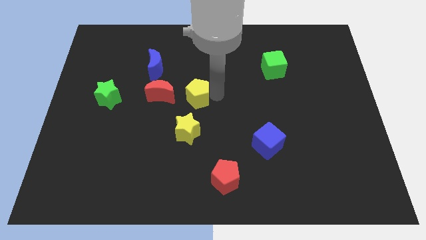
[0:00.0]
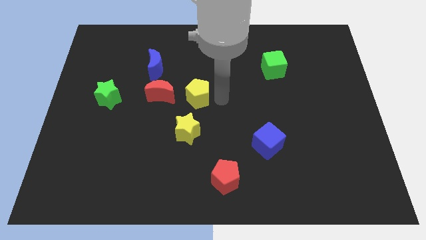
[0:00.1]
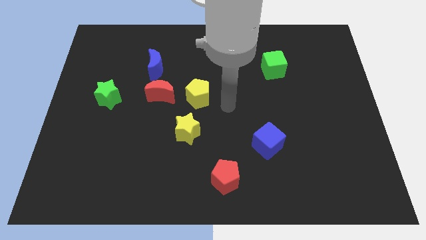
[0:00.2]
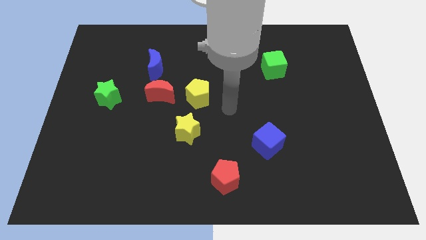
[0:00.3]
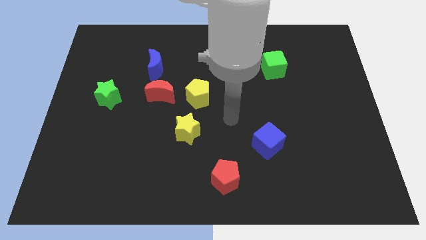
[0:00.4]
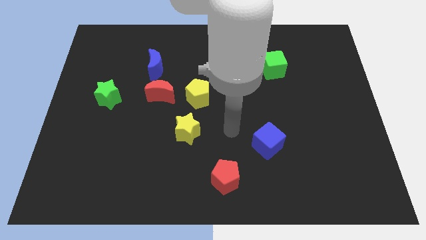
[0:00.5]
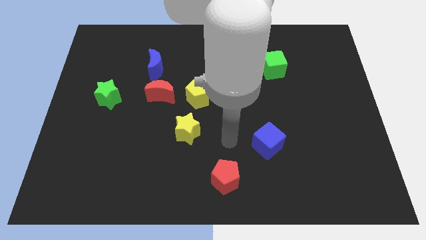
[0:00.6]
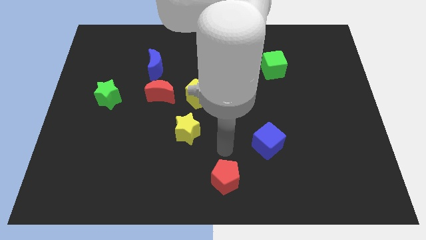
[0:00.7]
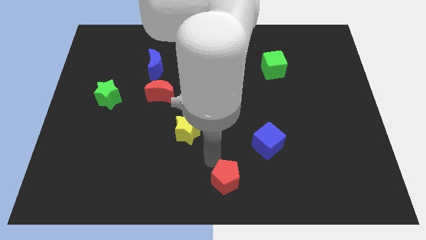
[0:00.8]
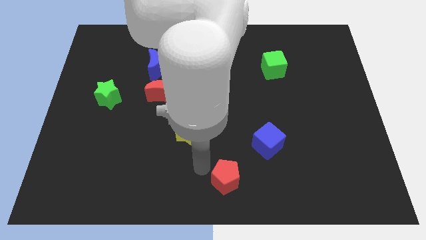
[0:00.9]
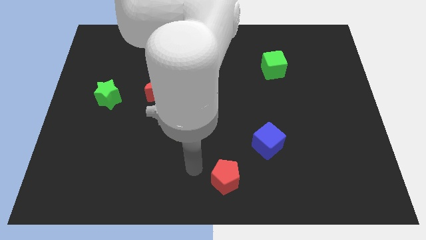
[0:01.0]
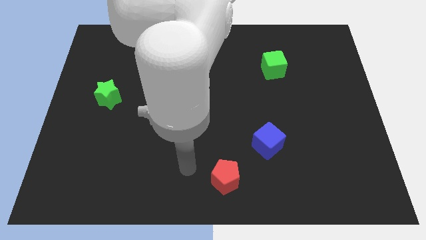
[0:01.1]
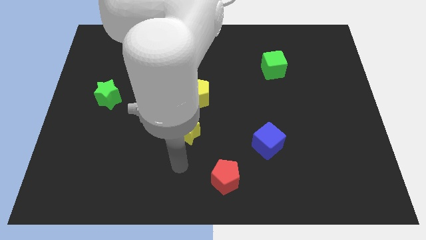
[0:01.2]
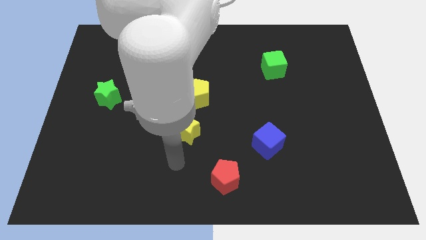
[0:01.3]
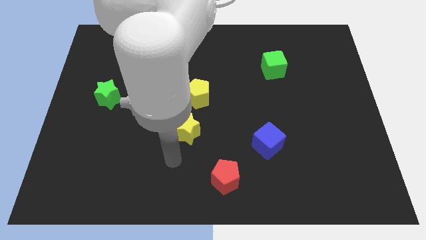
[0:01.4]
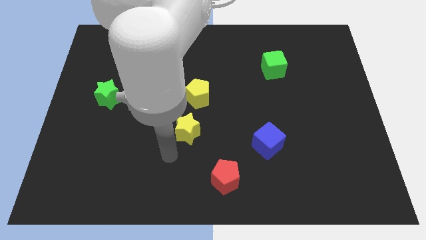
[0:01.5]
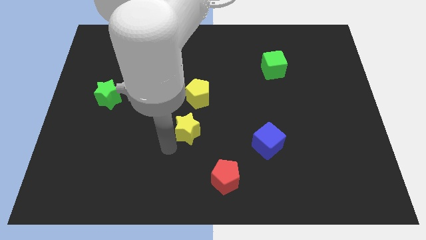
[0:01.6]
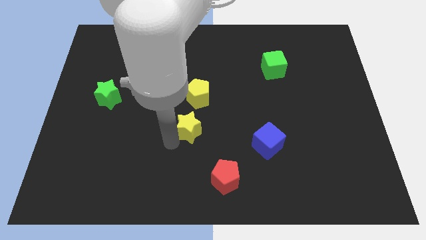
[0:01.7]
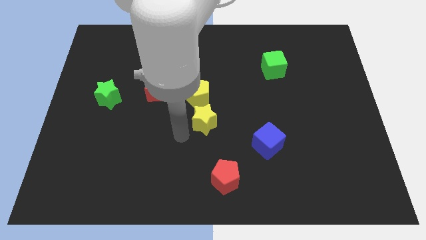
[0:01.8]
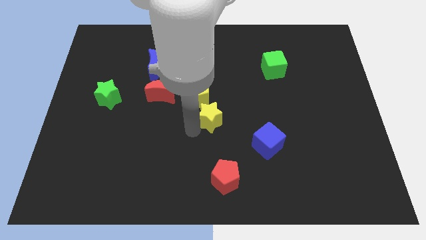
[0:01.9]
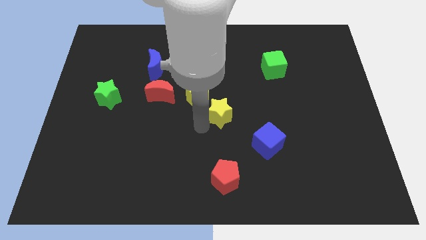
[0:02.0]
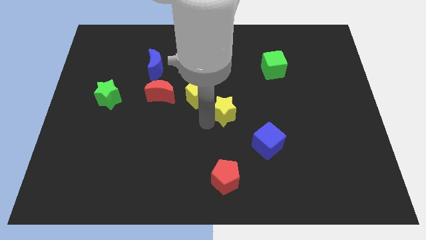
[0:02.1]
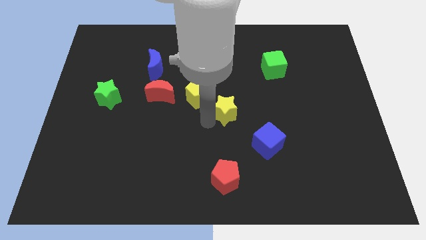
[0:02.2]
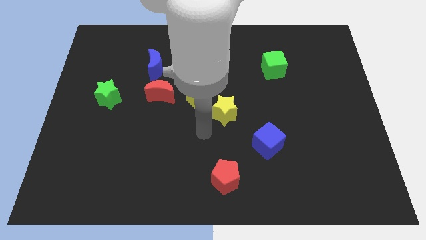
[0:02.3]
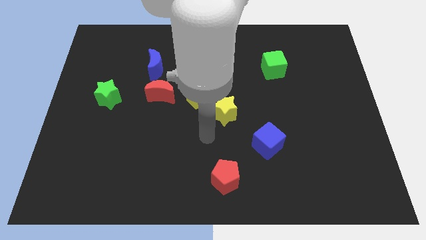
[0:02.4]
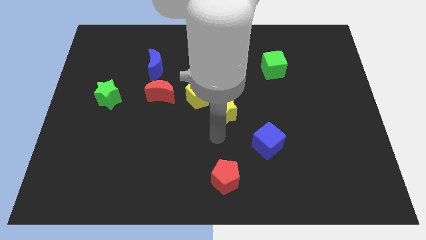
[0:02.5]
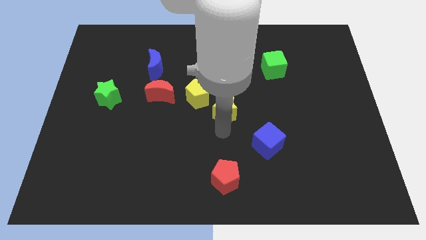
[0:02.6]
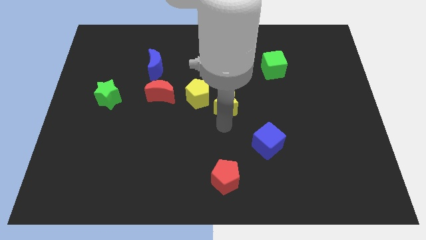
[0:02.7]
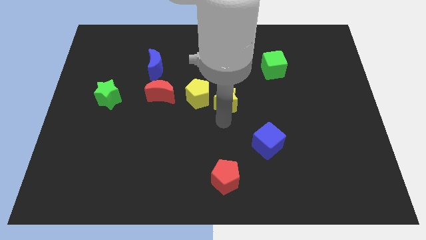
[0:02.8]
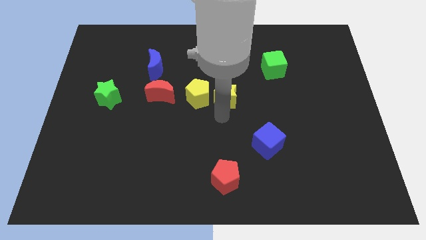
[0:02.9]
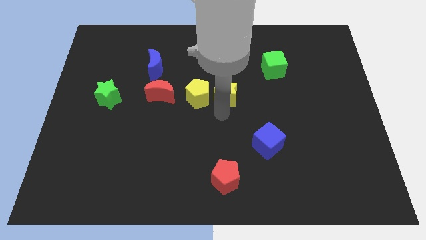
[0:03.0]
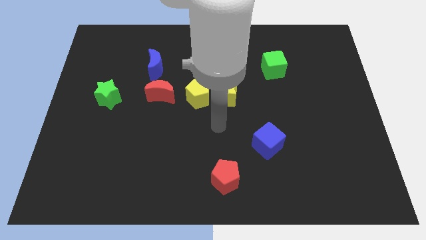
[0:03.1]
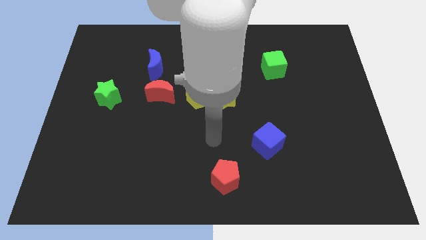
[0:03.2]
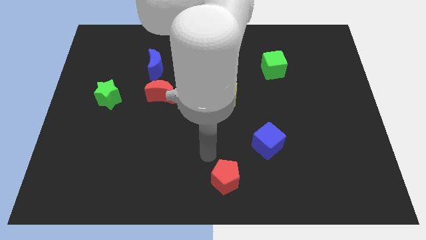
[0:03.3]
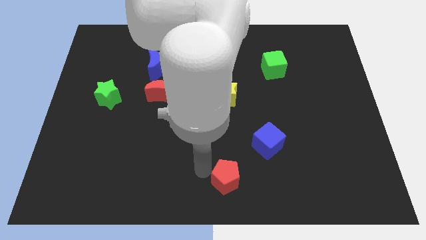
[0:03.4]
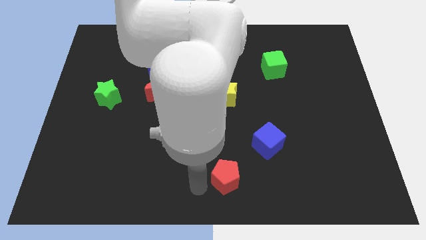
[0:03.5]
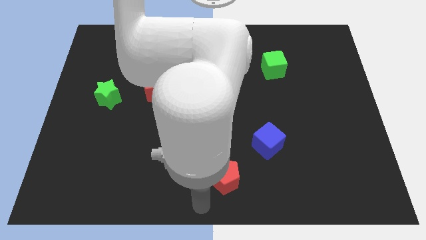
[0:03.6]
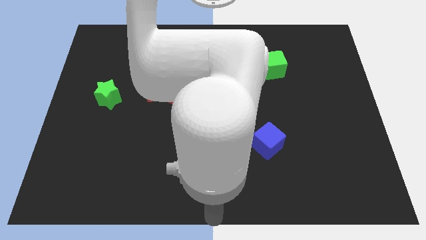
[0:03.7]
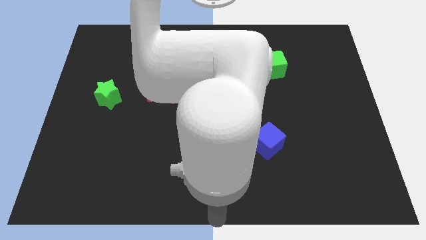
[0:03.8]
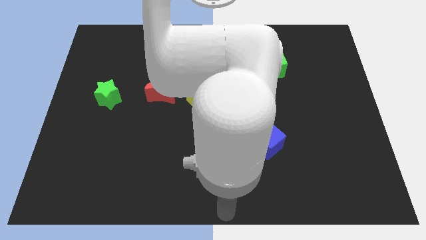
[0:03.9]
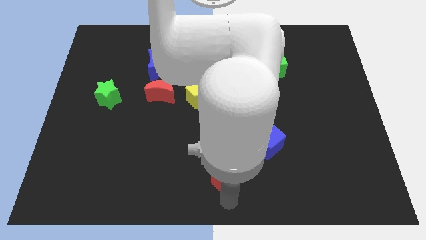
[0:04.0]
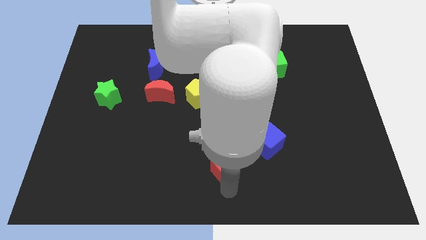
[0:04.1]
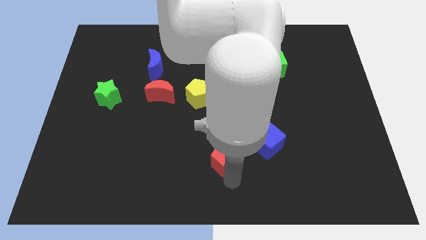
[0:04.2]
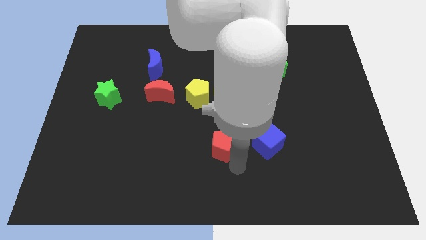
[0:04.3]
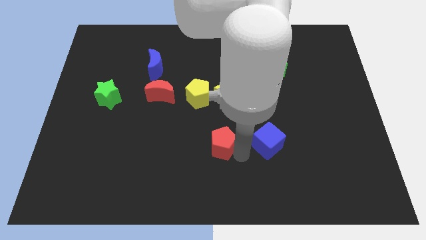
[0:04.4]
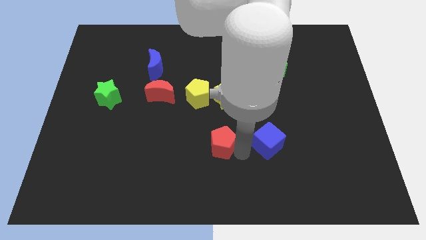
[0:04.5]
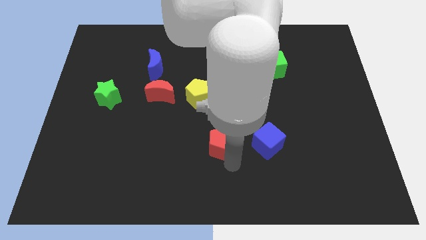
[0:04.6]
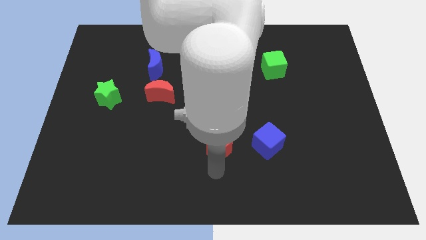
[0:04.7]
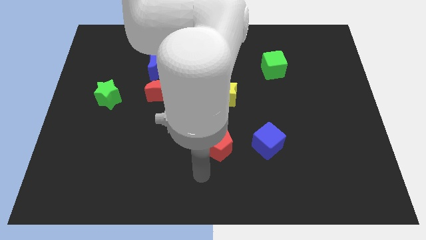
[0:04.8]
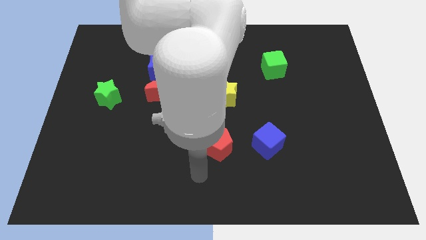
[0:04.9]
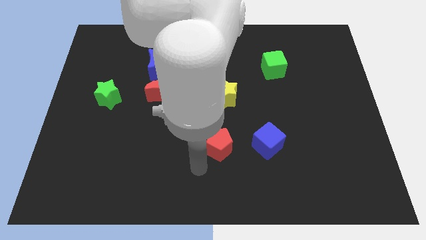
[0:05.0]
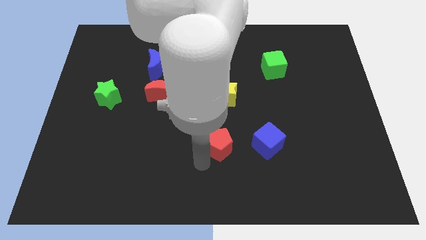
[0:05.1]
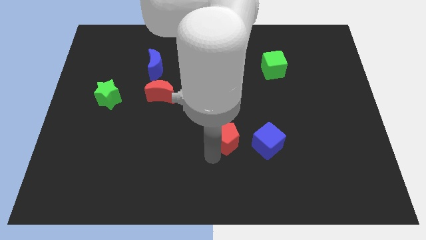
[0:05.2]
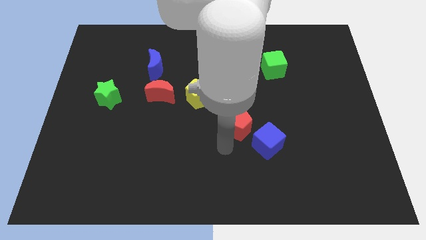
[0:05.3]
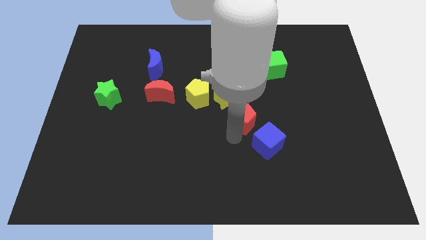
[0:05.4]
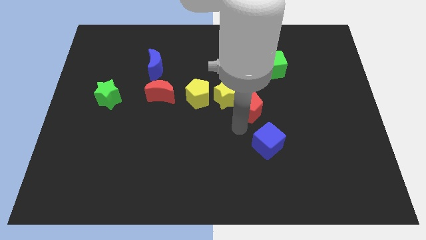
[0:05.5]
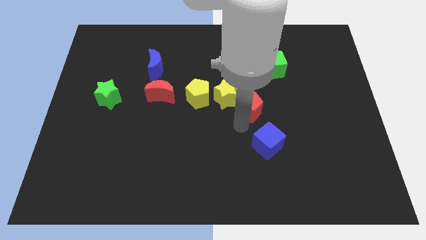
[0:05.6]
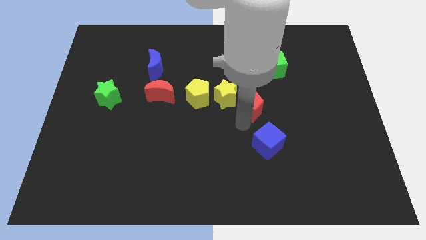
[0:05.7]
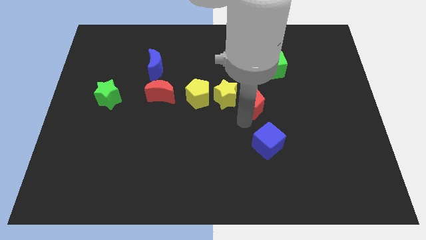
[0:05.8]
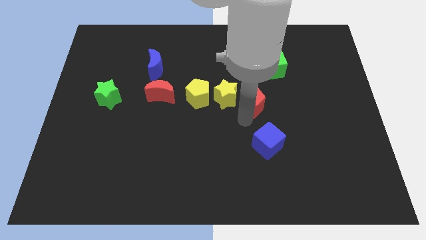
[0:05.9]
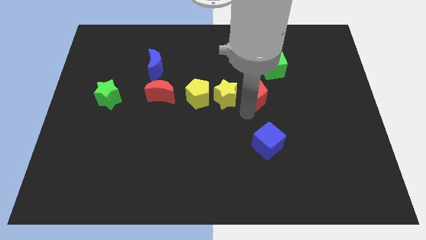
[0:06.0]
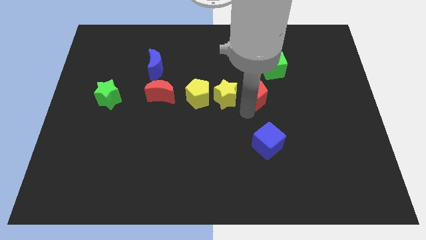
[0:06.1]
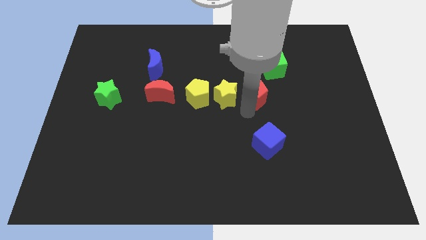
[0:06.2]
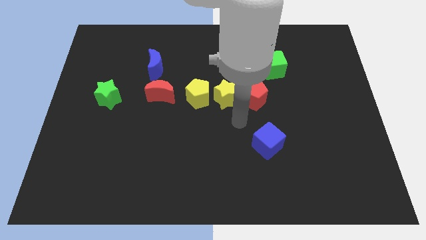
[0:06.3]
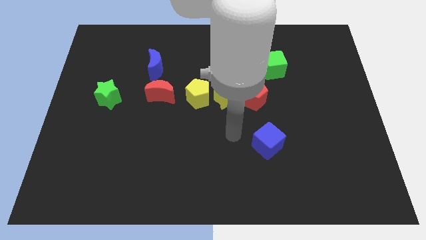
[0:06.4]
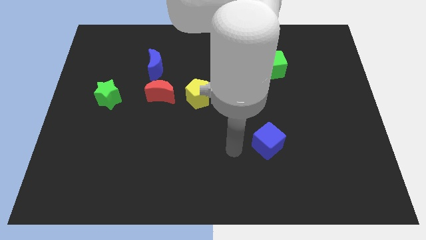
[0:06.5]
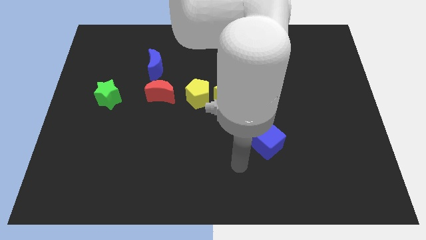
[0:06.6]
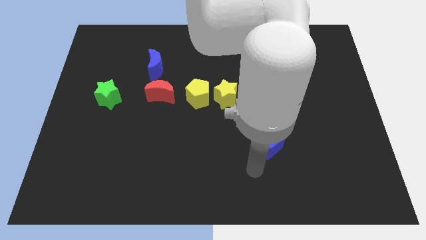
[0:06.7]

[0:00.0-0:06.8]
place the yellow and red blocks in a line horizontally at the center of the board

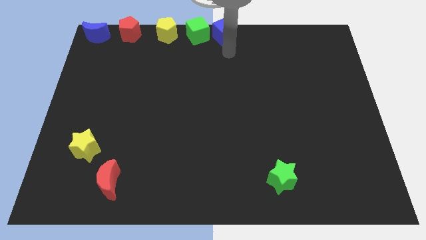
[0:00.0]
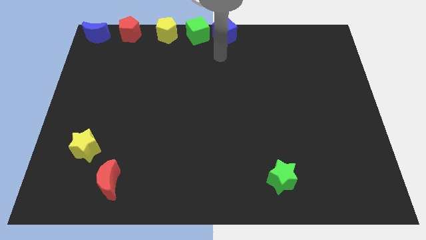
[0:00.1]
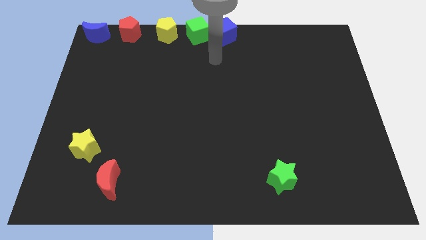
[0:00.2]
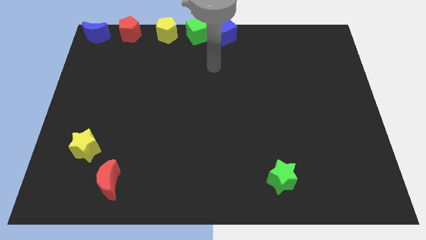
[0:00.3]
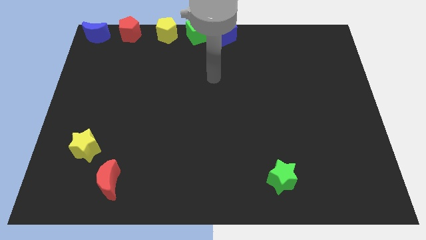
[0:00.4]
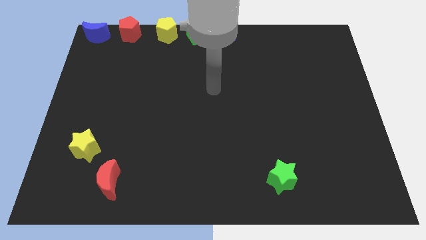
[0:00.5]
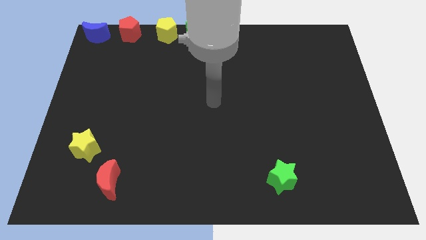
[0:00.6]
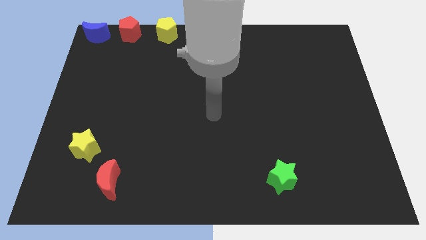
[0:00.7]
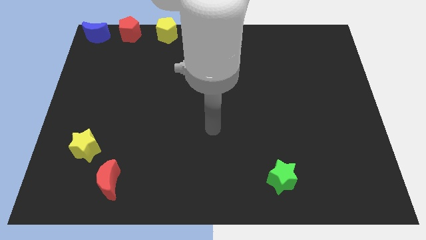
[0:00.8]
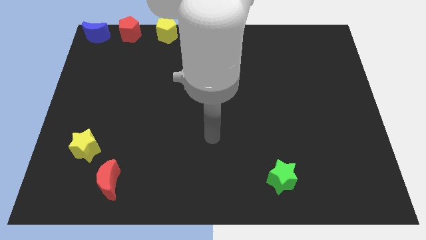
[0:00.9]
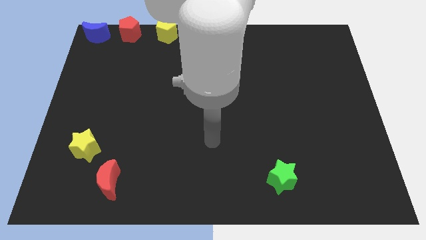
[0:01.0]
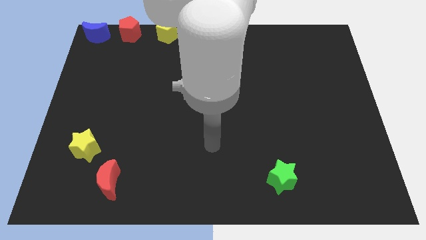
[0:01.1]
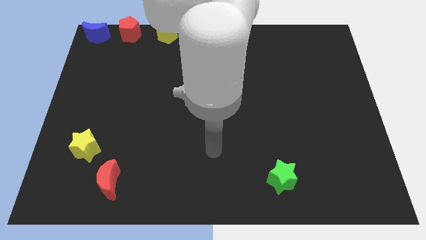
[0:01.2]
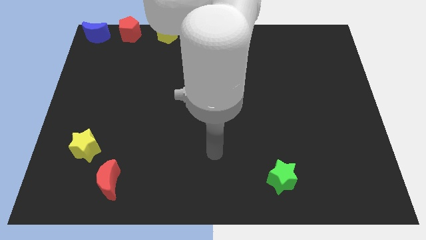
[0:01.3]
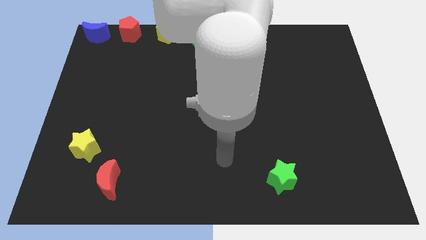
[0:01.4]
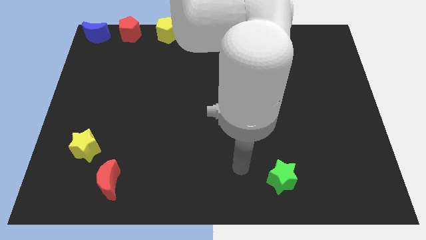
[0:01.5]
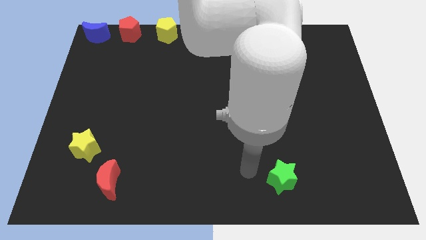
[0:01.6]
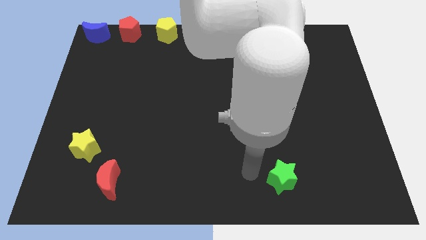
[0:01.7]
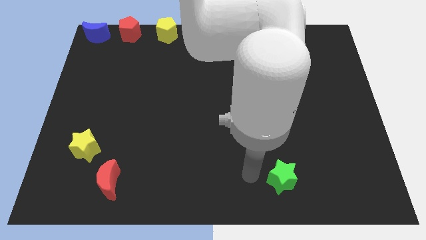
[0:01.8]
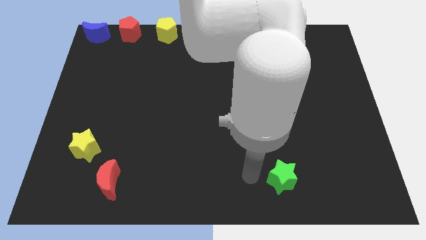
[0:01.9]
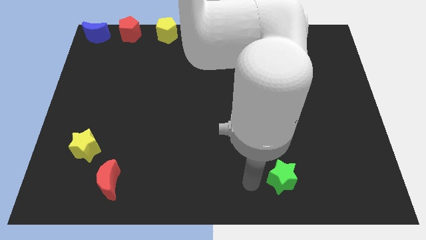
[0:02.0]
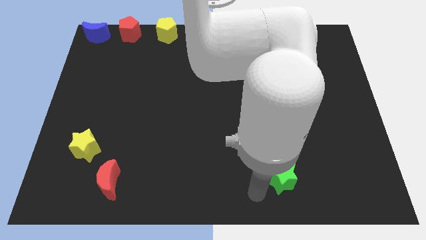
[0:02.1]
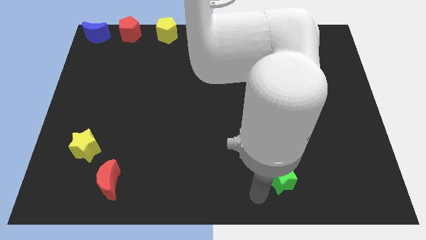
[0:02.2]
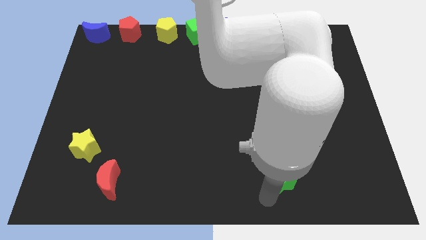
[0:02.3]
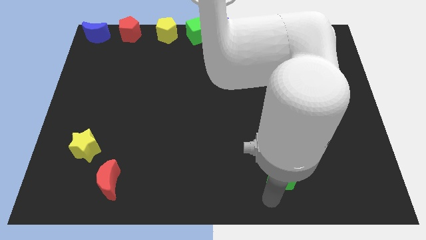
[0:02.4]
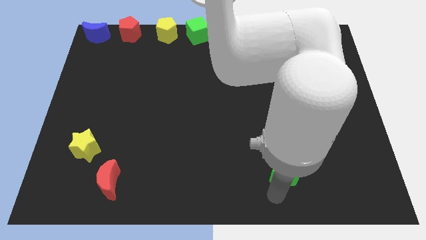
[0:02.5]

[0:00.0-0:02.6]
move away from the bottom side of the blue cube
